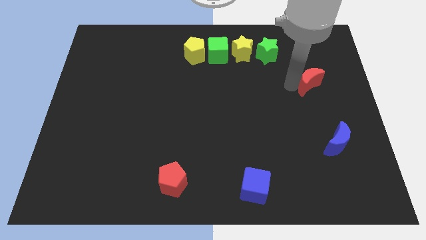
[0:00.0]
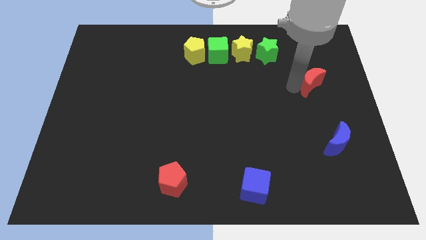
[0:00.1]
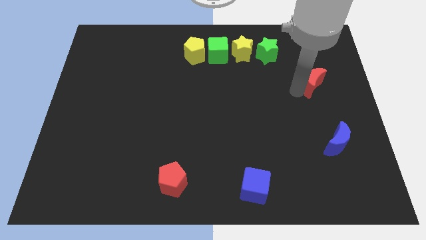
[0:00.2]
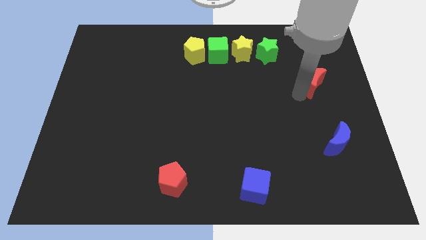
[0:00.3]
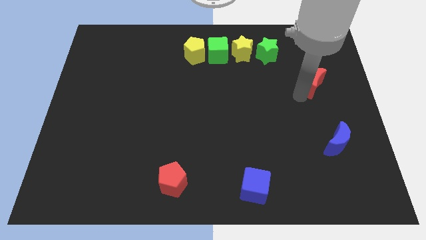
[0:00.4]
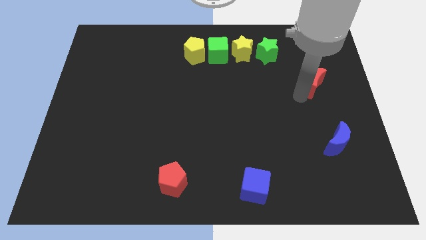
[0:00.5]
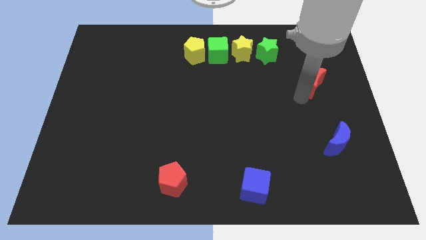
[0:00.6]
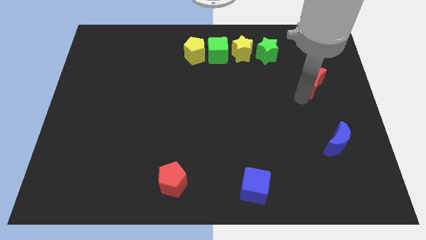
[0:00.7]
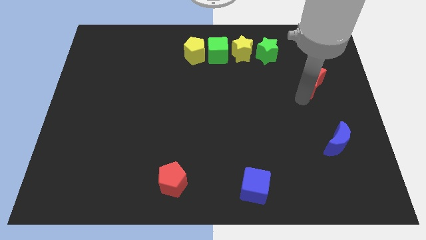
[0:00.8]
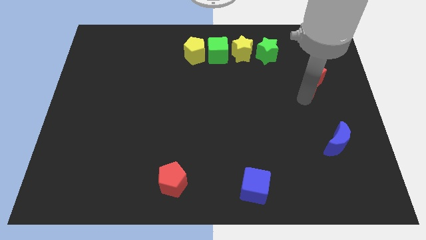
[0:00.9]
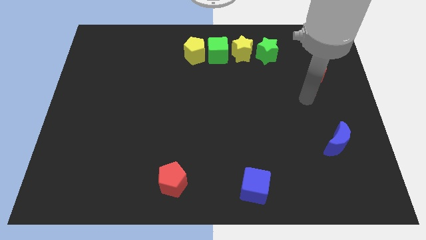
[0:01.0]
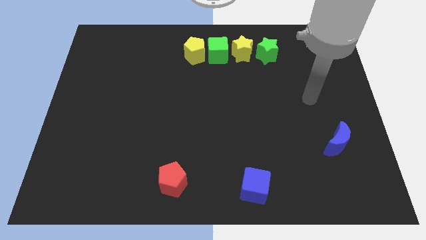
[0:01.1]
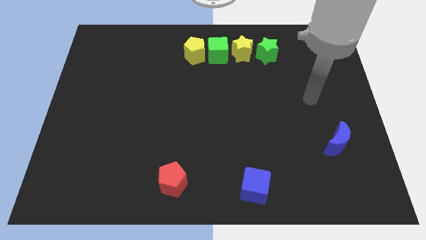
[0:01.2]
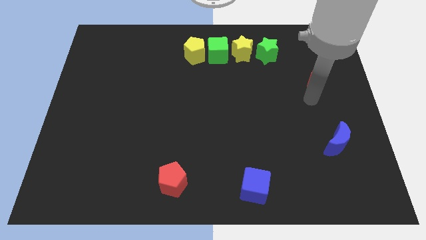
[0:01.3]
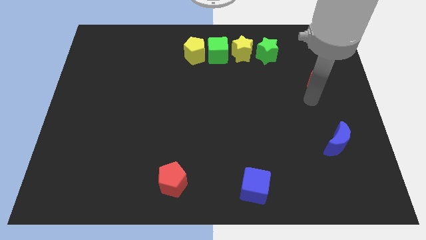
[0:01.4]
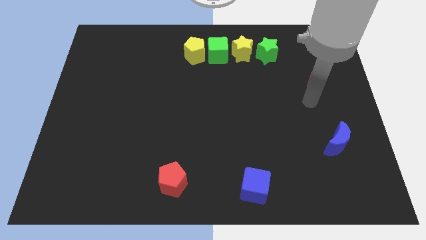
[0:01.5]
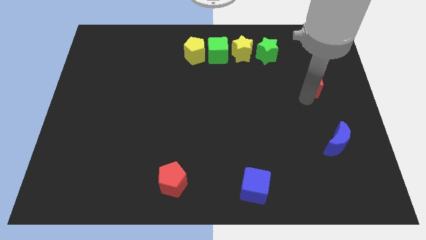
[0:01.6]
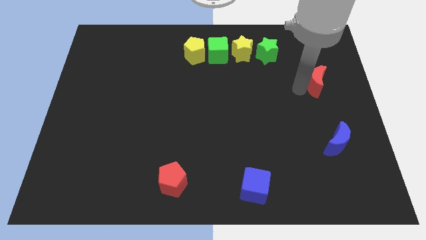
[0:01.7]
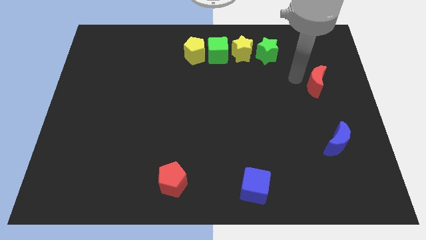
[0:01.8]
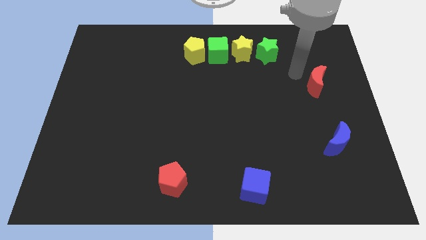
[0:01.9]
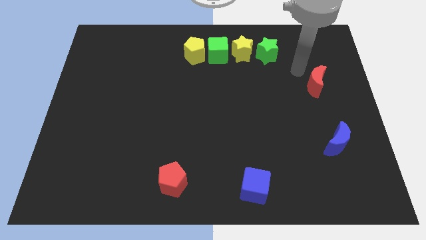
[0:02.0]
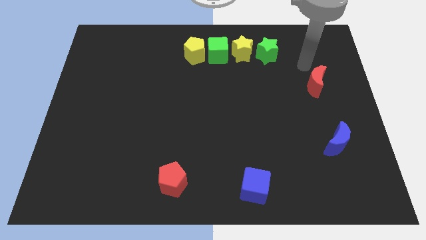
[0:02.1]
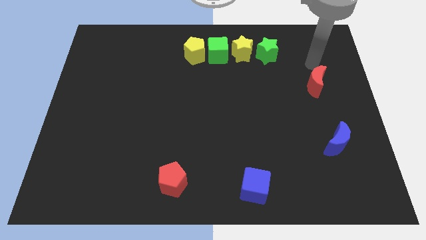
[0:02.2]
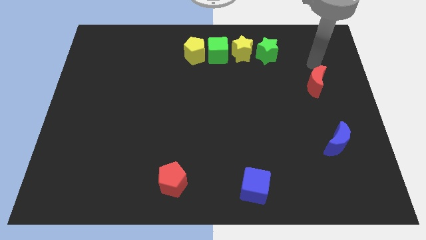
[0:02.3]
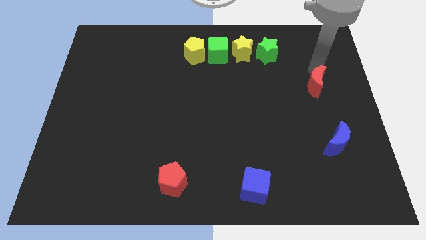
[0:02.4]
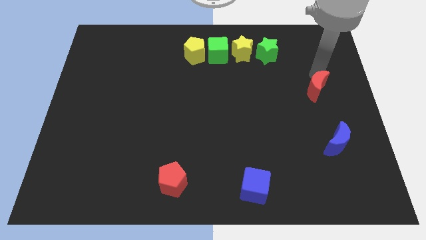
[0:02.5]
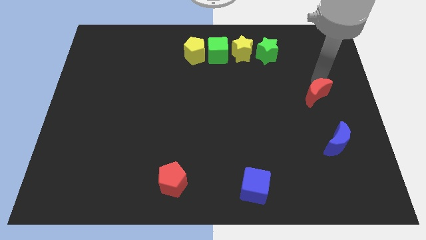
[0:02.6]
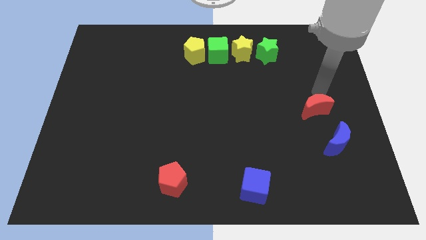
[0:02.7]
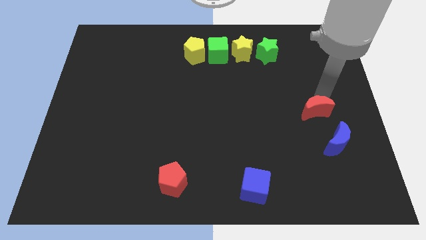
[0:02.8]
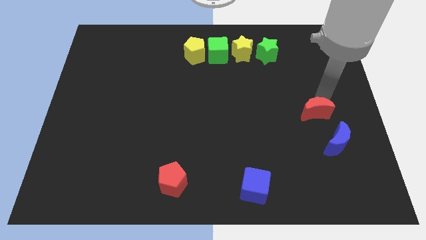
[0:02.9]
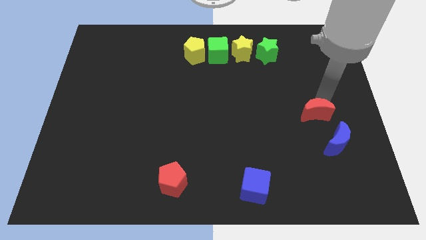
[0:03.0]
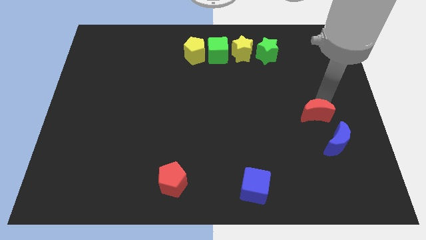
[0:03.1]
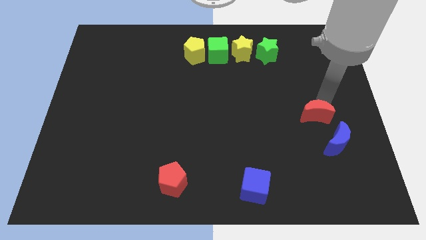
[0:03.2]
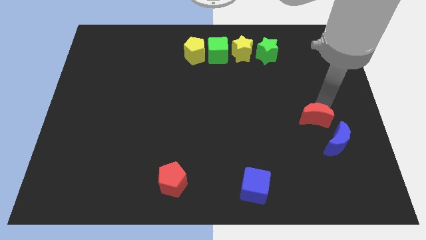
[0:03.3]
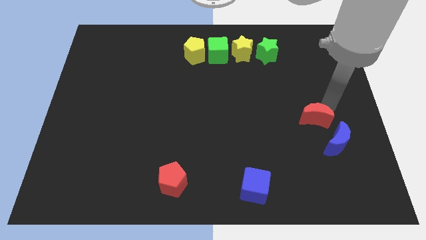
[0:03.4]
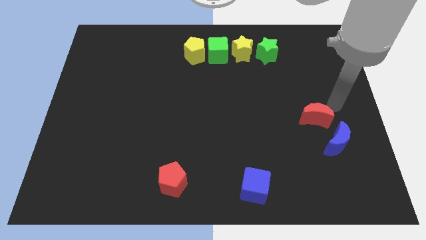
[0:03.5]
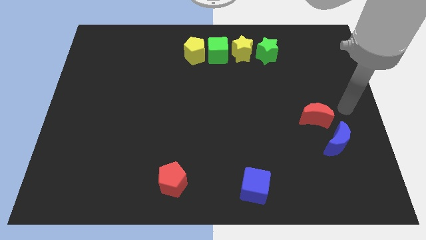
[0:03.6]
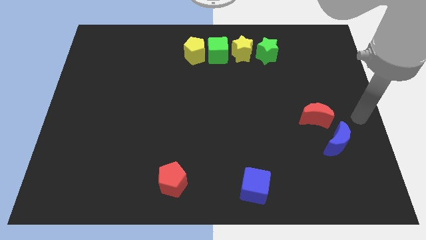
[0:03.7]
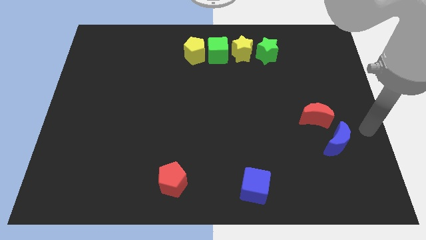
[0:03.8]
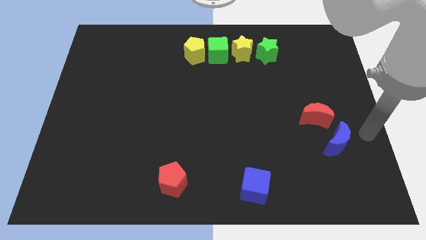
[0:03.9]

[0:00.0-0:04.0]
push red crescent towards blue crescent

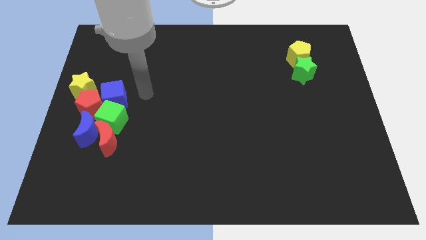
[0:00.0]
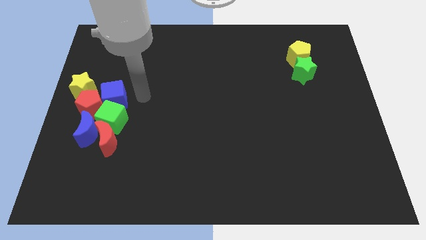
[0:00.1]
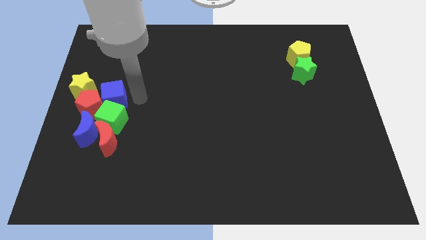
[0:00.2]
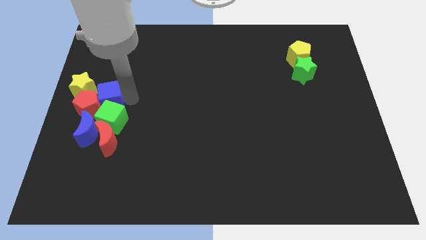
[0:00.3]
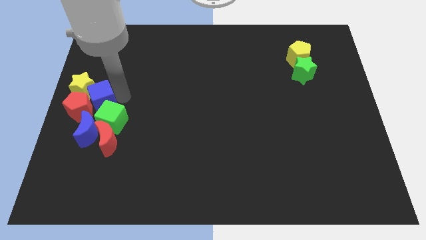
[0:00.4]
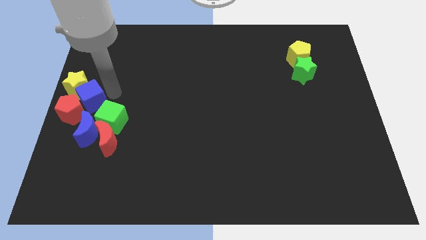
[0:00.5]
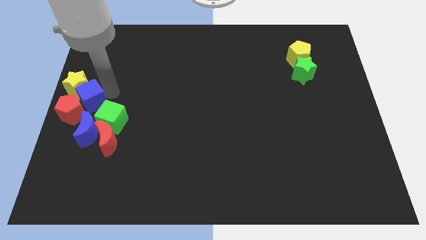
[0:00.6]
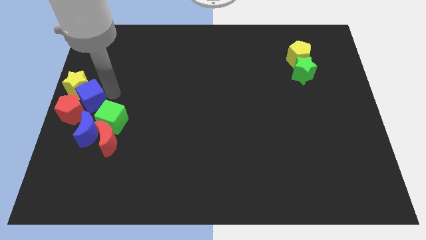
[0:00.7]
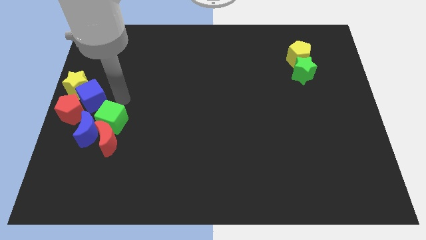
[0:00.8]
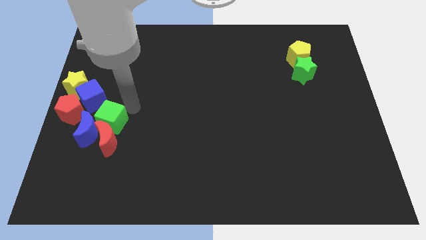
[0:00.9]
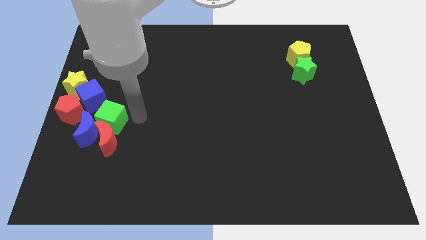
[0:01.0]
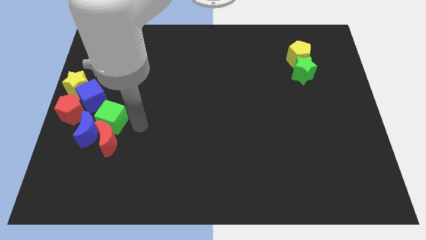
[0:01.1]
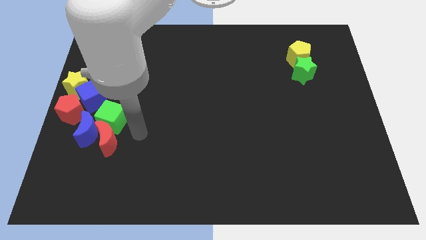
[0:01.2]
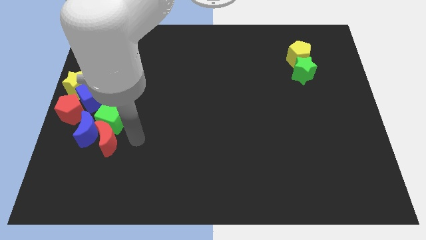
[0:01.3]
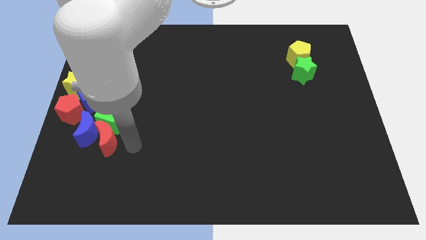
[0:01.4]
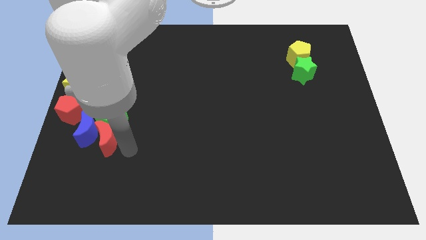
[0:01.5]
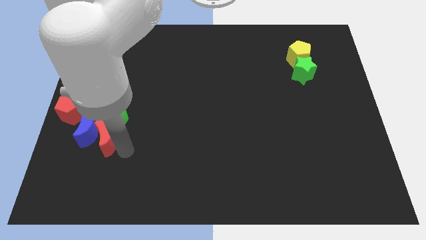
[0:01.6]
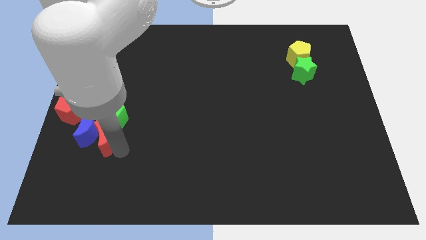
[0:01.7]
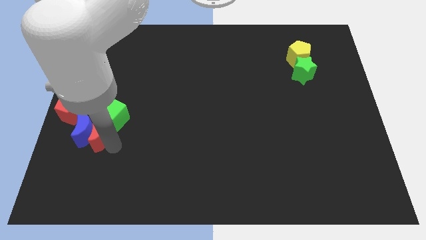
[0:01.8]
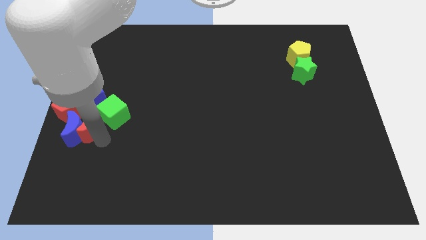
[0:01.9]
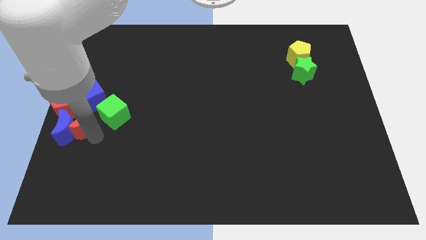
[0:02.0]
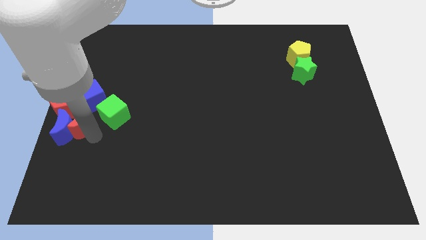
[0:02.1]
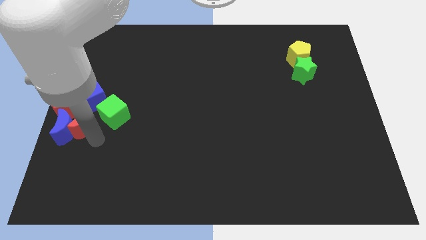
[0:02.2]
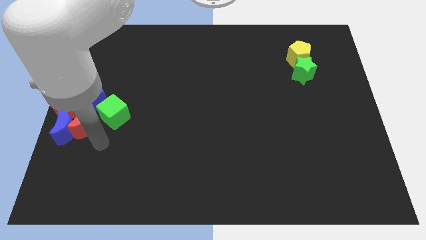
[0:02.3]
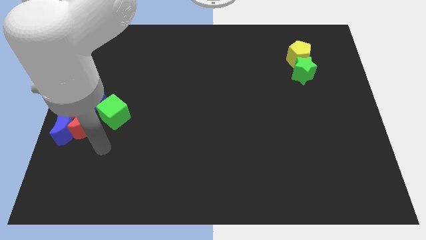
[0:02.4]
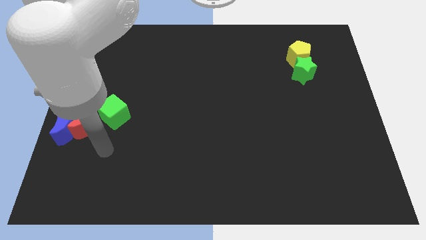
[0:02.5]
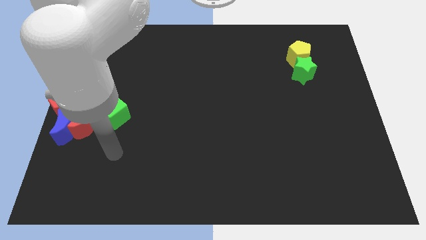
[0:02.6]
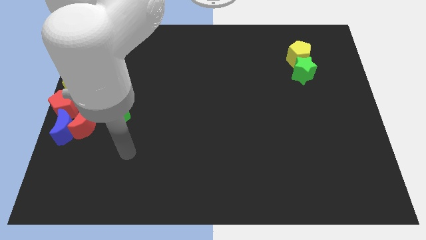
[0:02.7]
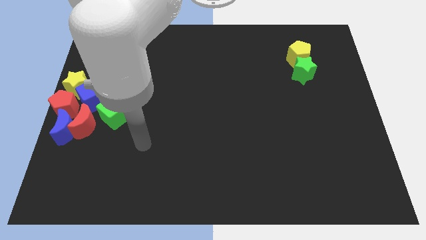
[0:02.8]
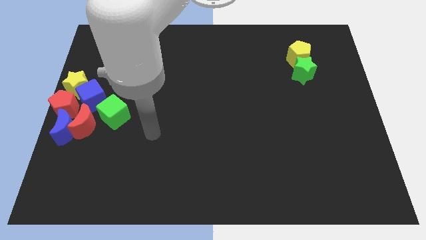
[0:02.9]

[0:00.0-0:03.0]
move the blue cube into the red pentagon with the group of blocks

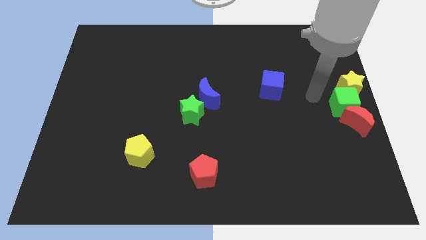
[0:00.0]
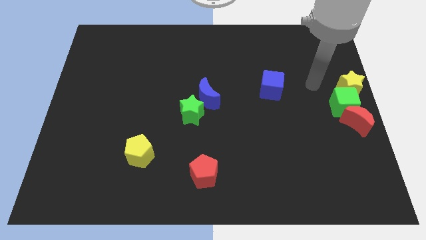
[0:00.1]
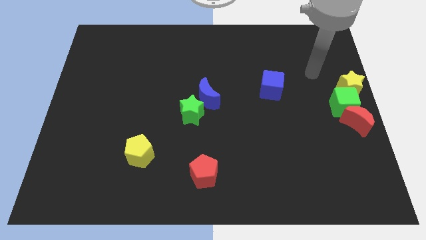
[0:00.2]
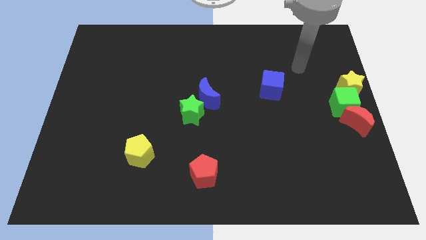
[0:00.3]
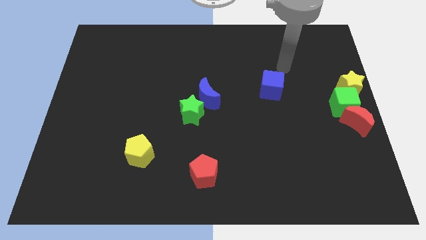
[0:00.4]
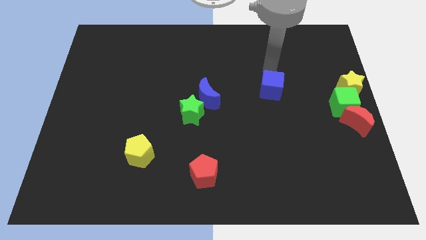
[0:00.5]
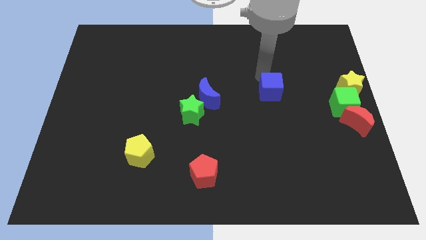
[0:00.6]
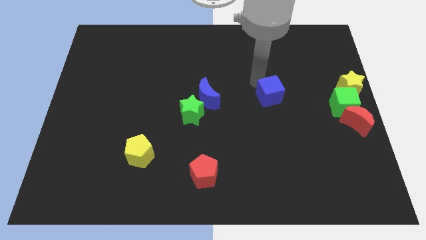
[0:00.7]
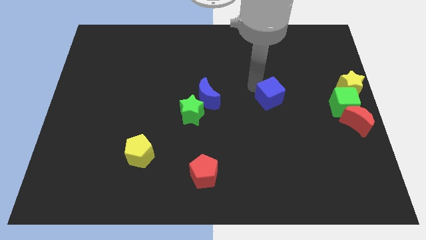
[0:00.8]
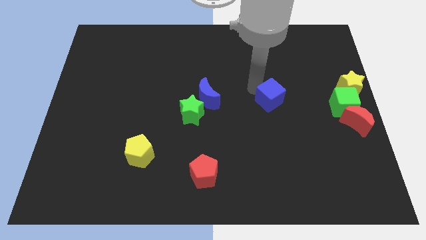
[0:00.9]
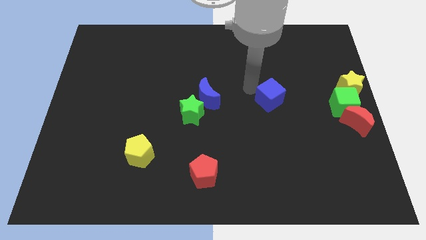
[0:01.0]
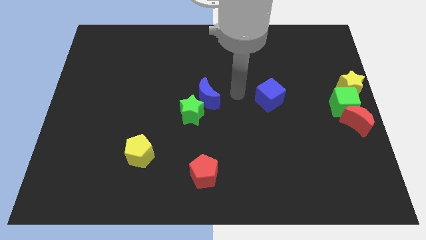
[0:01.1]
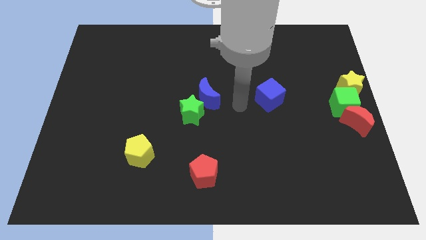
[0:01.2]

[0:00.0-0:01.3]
slightly move the blue cube towards the bottom

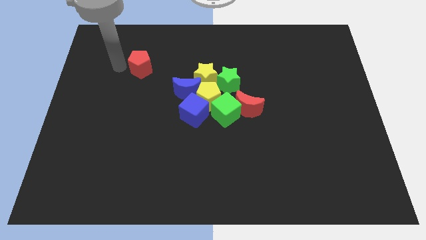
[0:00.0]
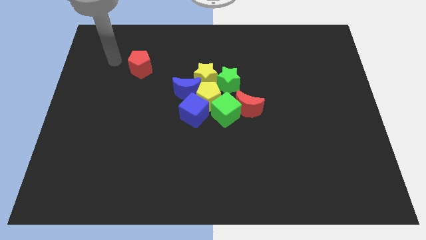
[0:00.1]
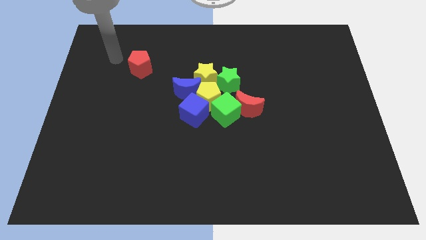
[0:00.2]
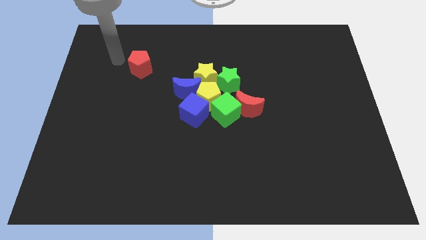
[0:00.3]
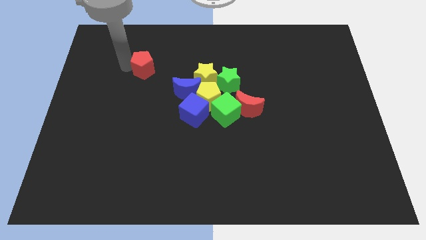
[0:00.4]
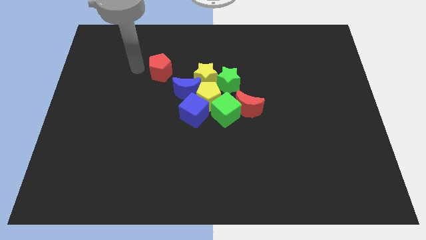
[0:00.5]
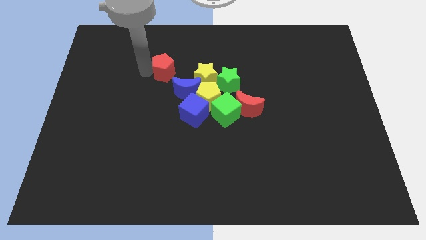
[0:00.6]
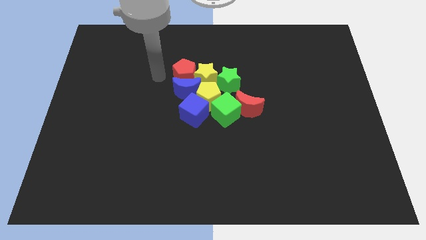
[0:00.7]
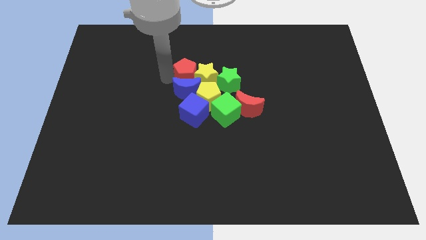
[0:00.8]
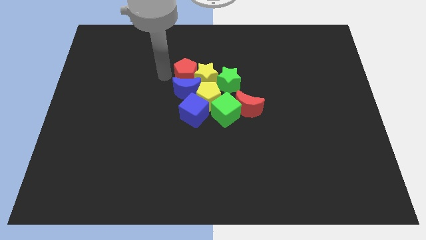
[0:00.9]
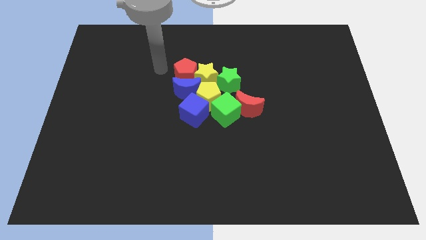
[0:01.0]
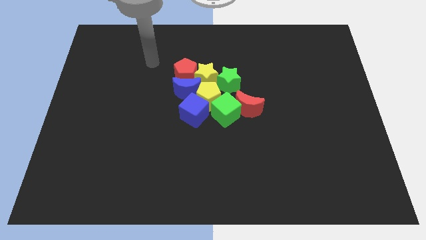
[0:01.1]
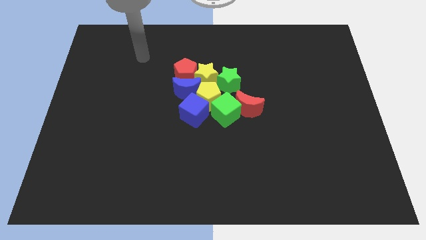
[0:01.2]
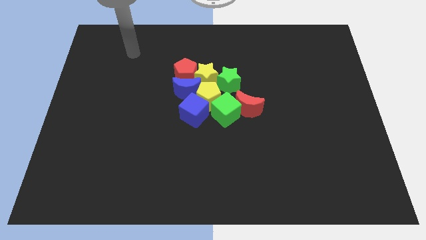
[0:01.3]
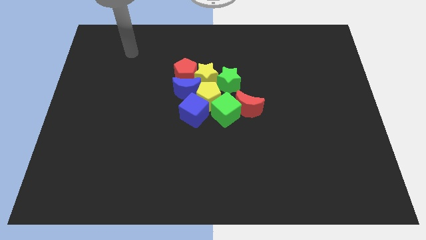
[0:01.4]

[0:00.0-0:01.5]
group up all the blocks
